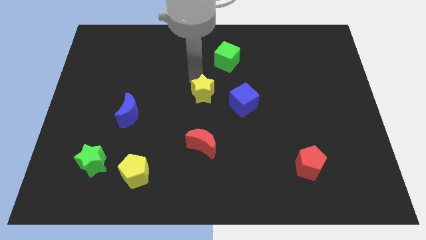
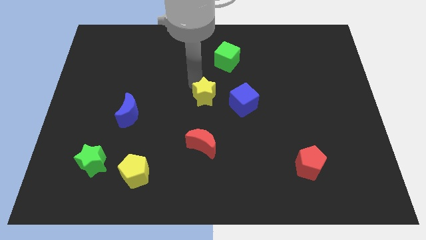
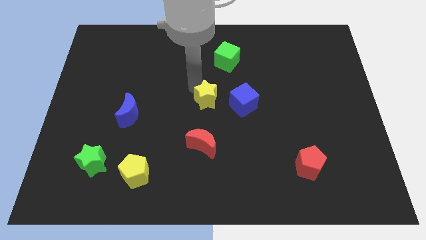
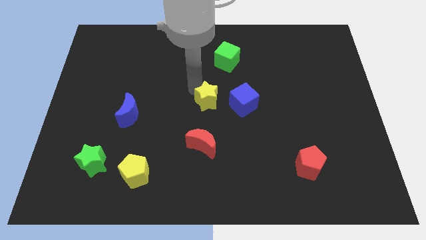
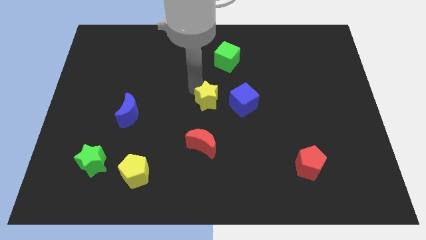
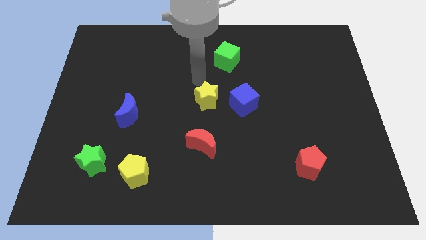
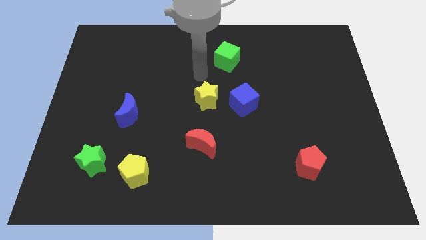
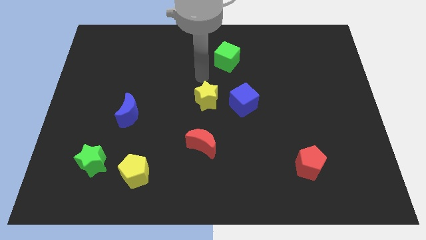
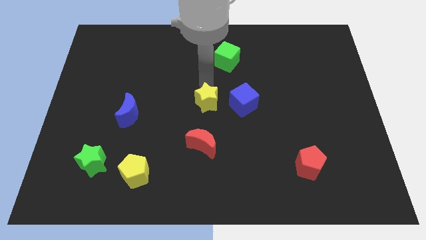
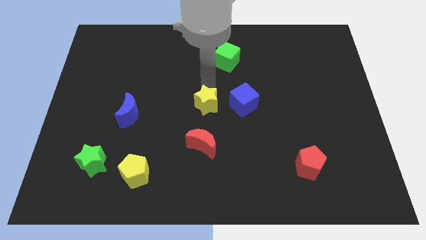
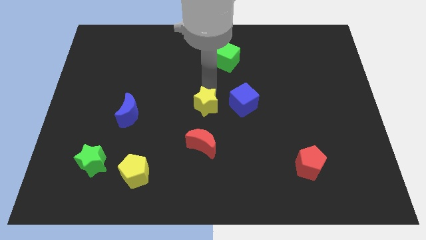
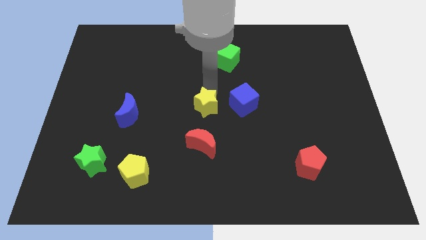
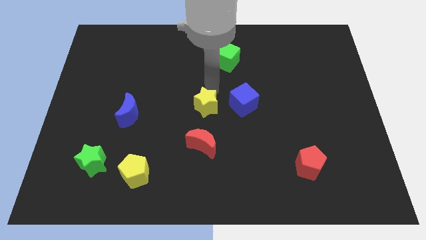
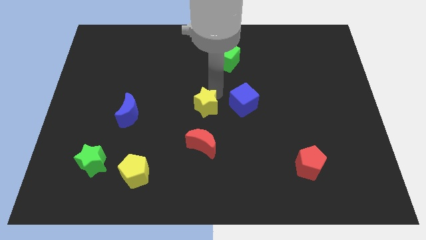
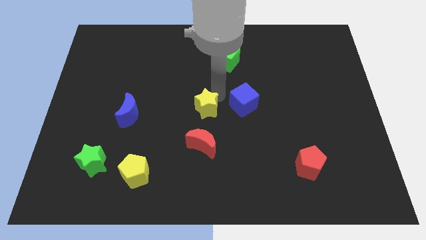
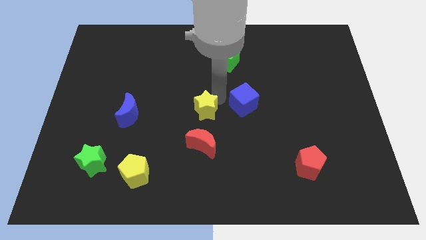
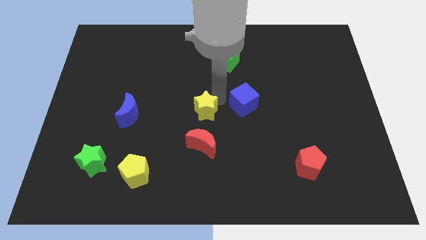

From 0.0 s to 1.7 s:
place the yellow star parallel to blue cube

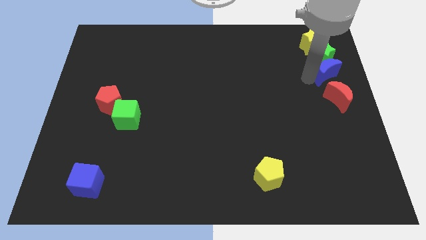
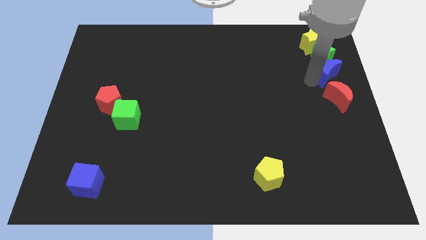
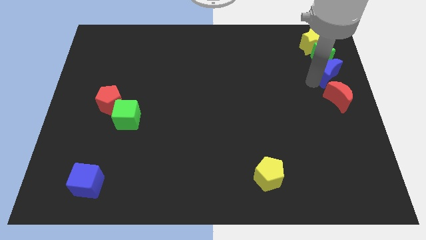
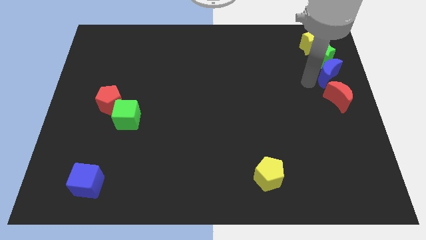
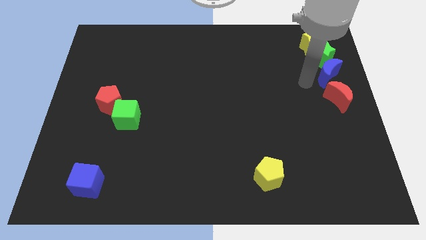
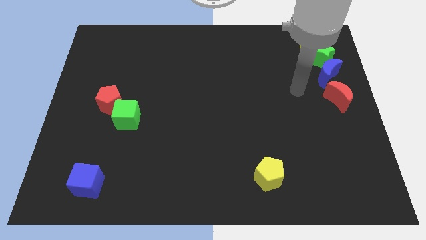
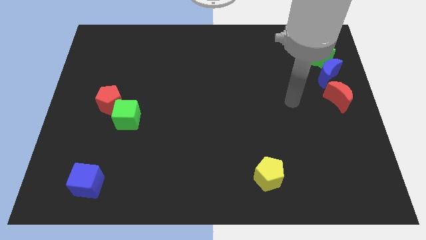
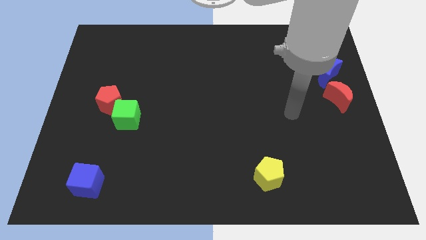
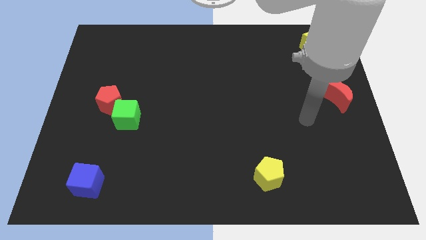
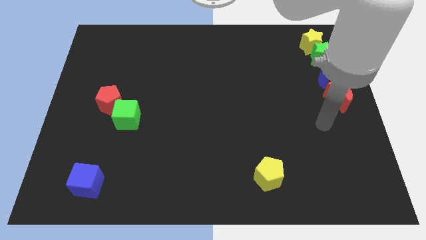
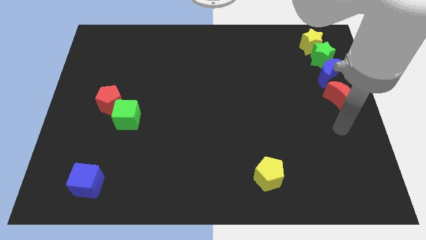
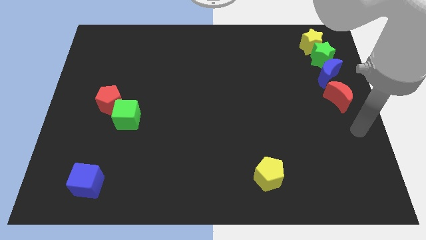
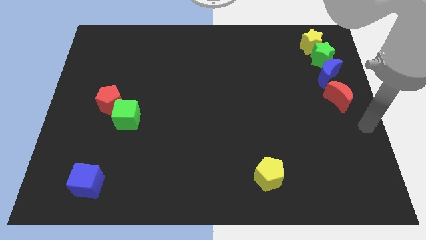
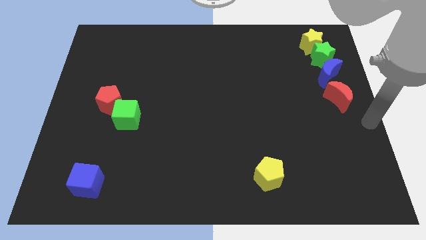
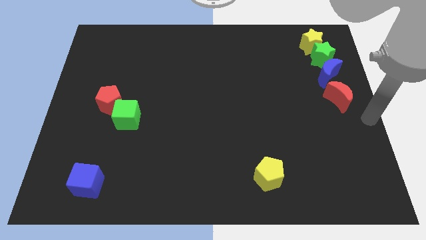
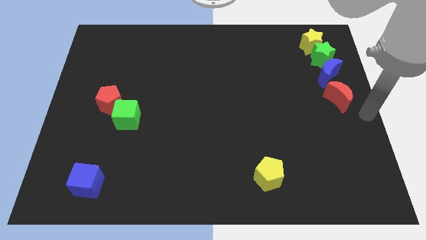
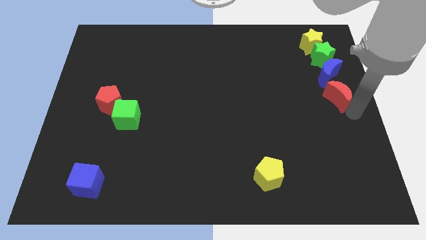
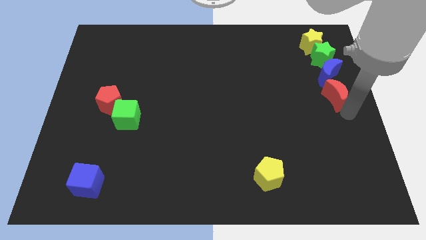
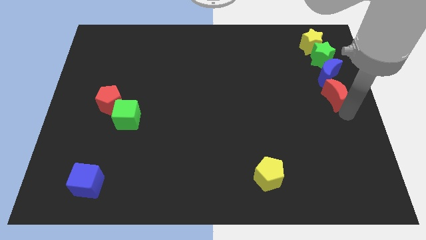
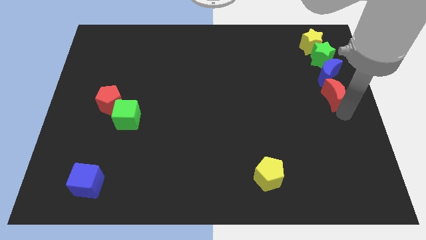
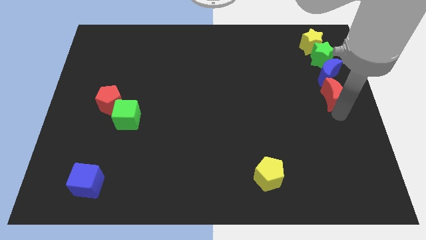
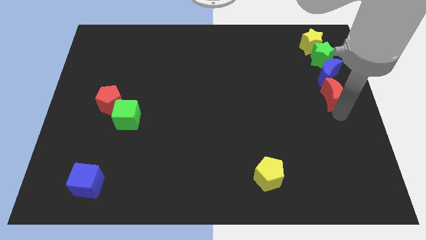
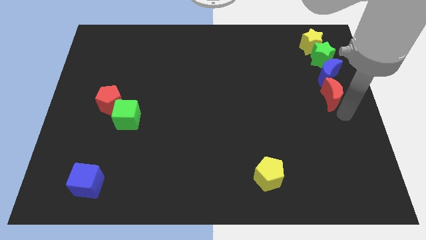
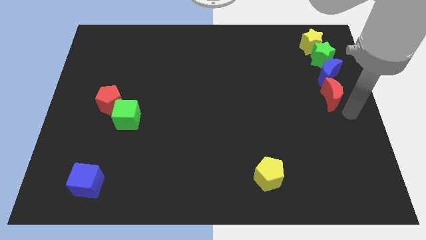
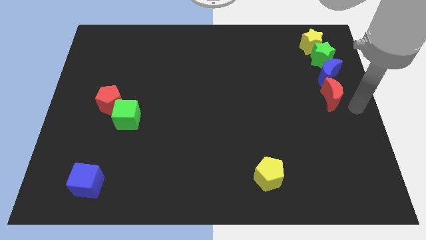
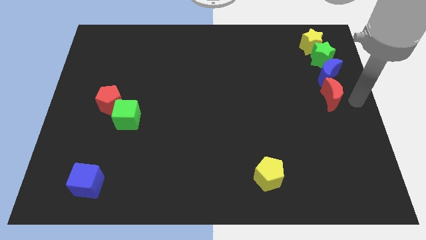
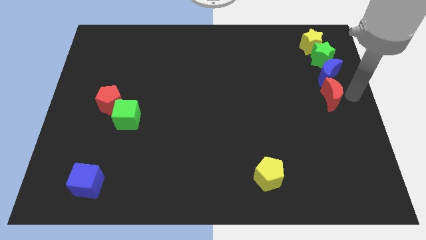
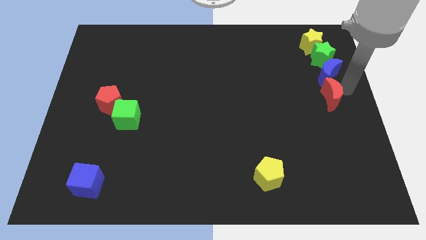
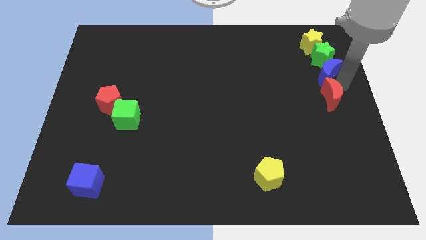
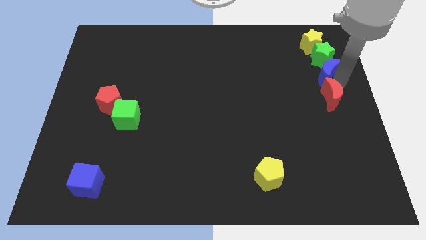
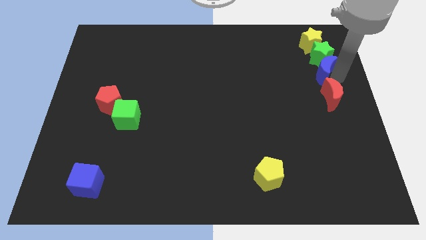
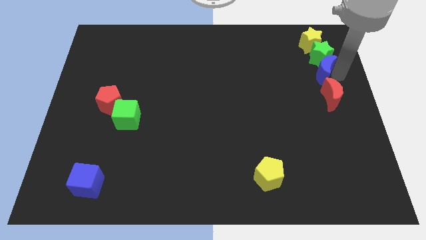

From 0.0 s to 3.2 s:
move your arm towards the red pentagon

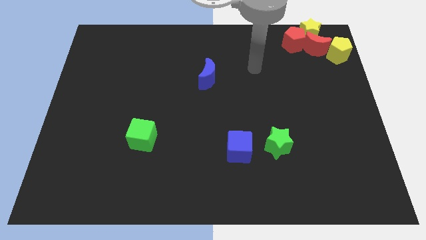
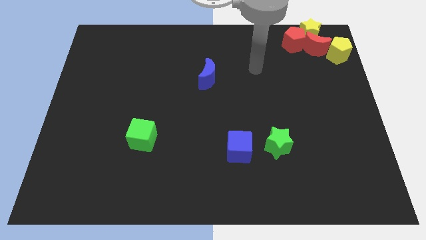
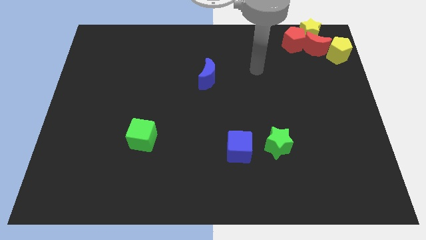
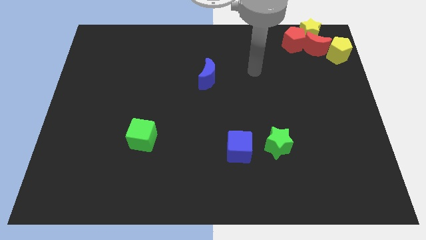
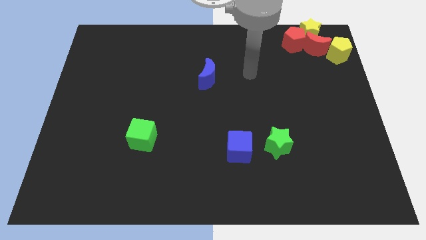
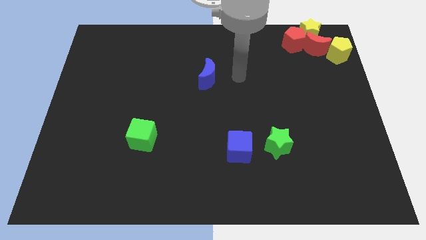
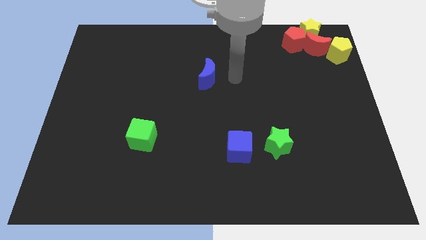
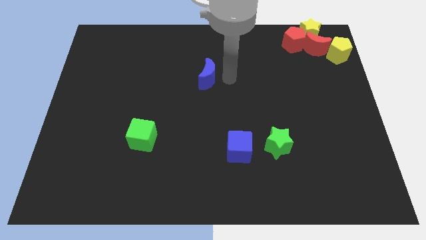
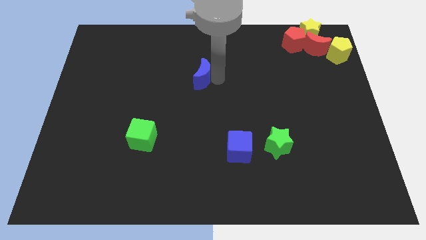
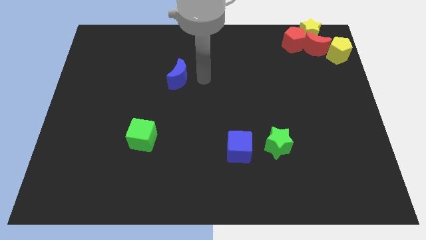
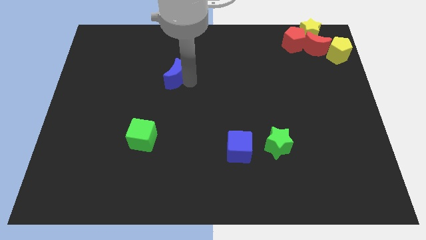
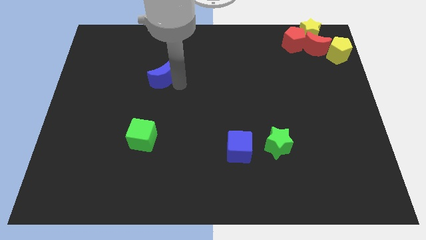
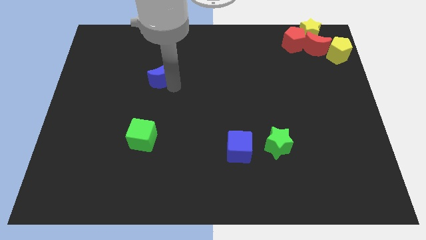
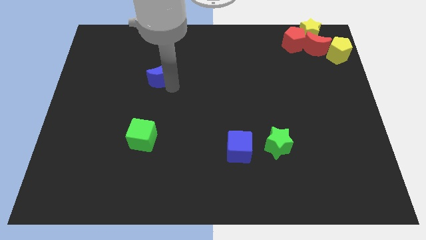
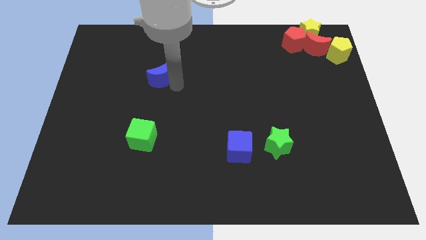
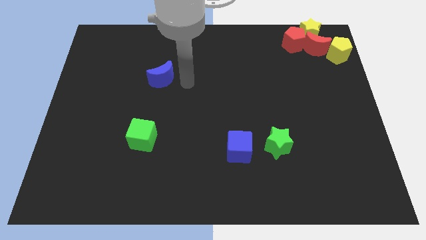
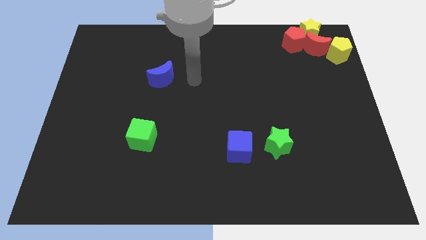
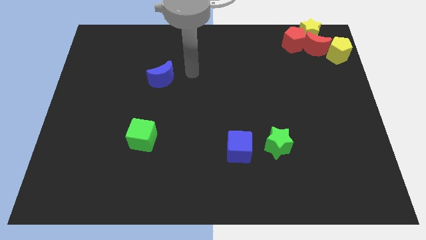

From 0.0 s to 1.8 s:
place the blue moon above the green cube

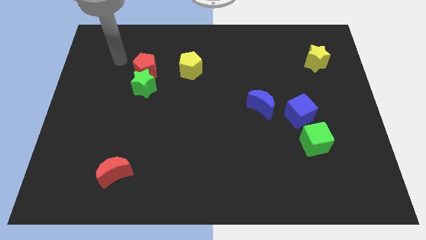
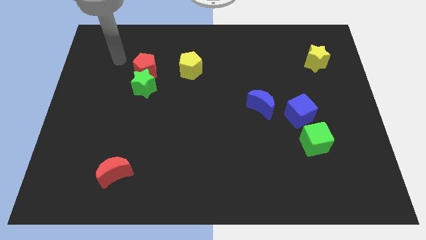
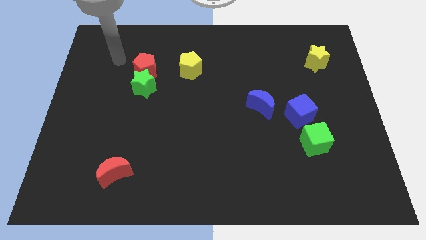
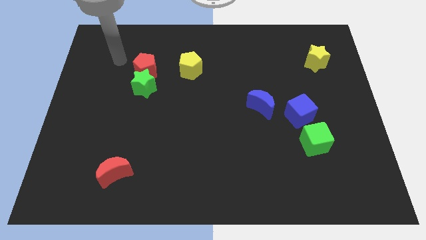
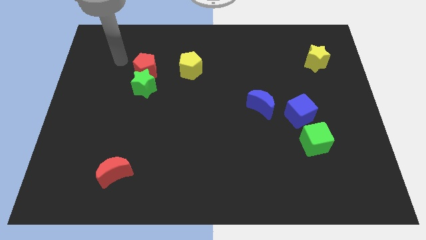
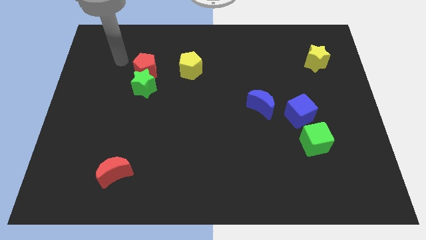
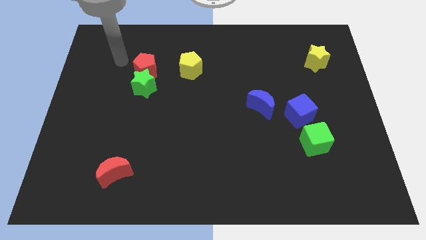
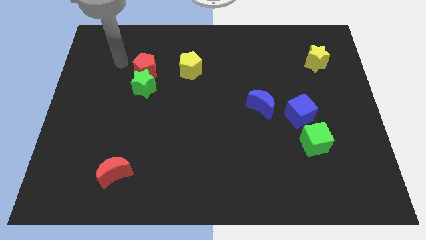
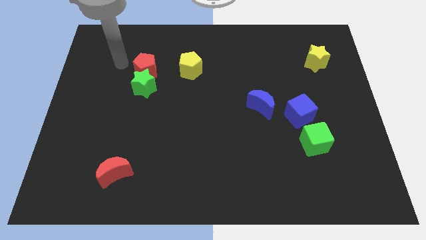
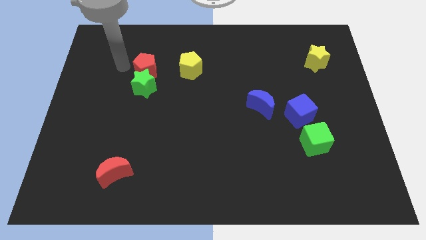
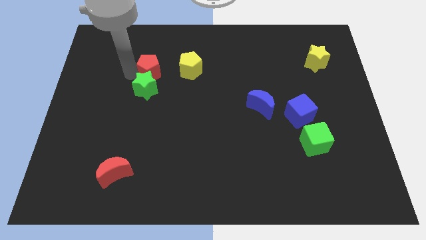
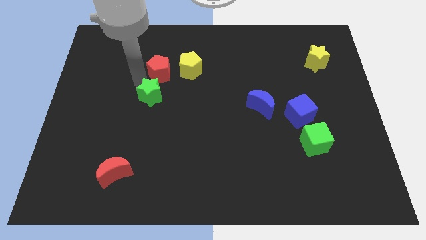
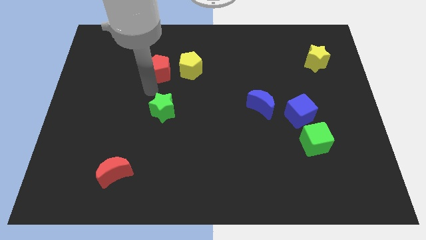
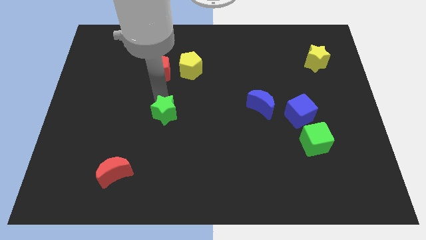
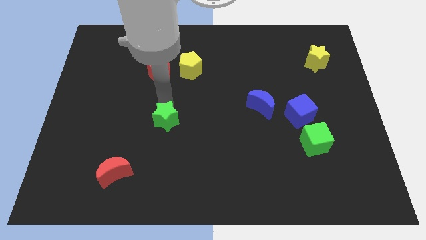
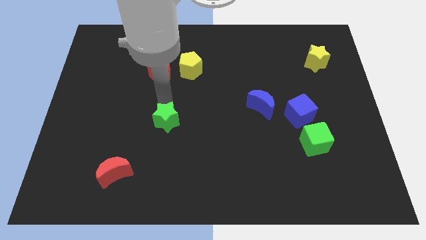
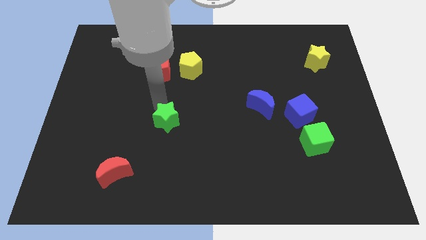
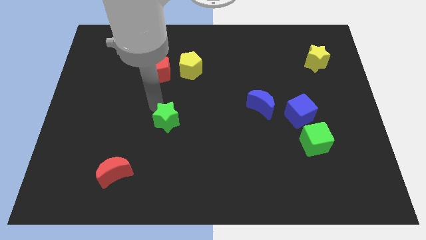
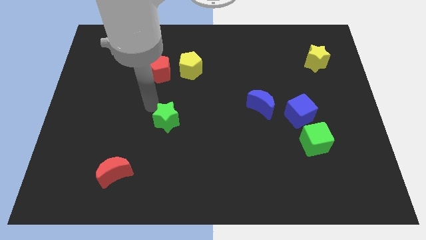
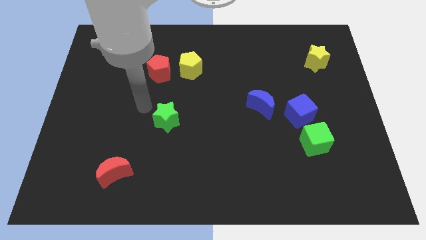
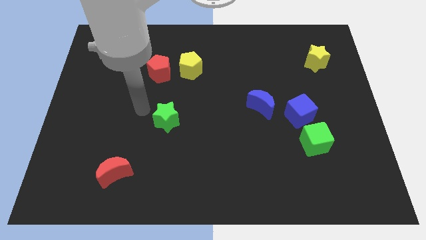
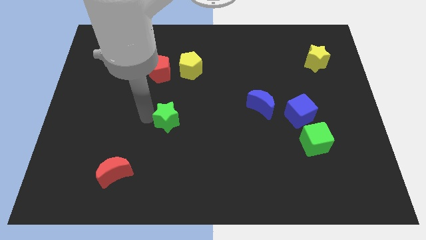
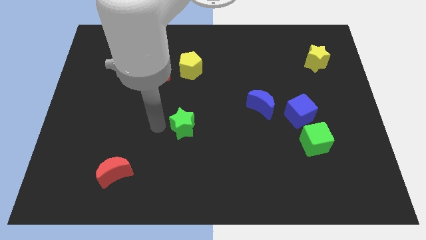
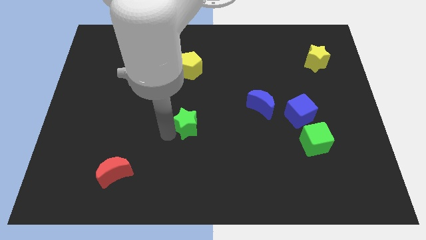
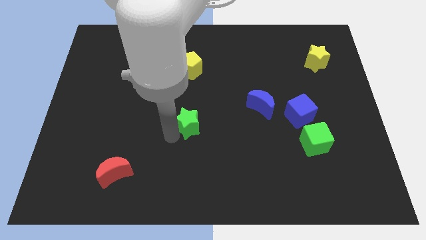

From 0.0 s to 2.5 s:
separate green star from red pentagon
